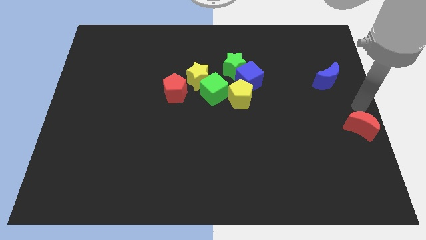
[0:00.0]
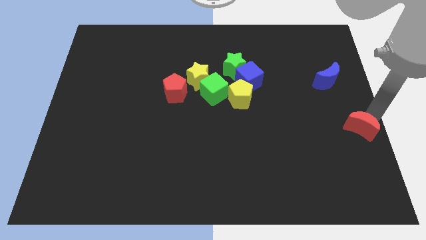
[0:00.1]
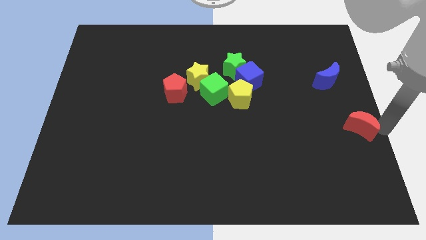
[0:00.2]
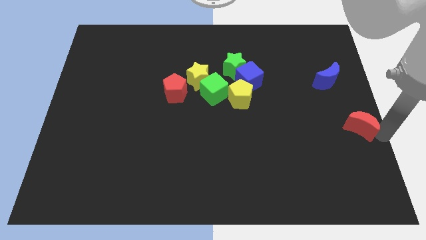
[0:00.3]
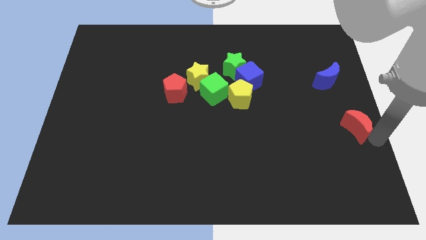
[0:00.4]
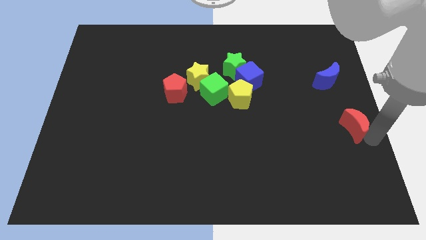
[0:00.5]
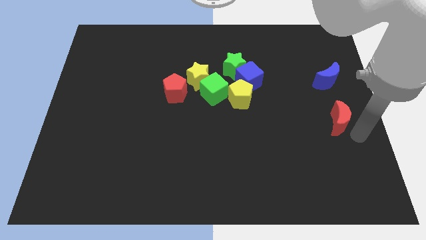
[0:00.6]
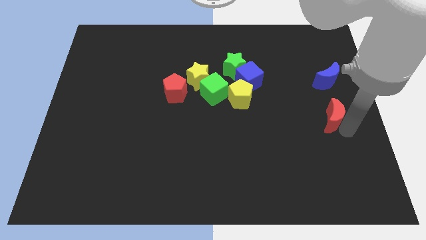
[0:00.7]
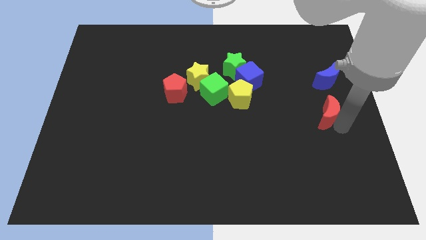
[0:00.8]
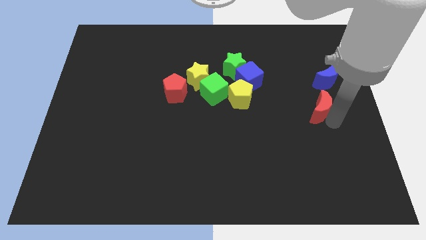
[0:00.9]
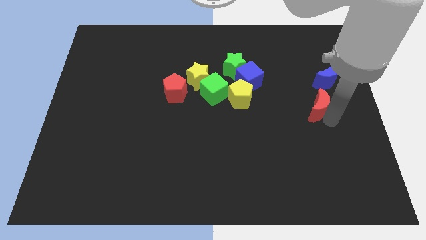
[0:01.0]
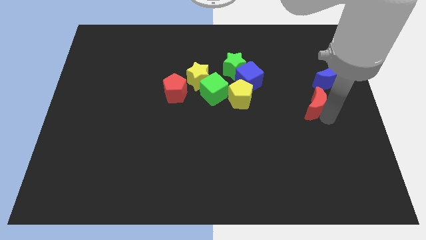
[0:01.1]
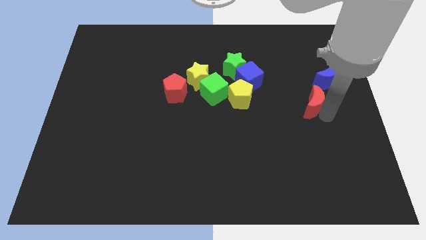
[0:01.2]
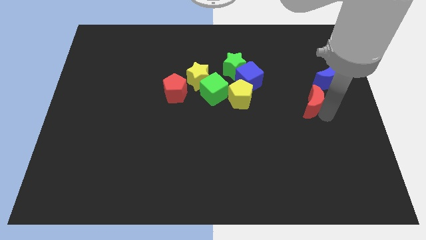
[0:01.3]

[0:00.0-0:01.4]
place the red crescent below the blue crescent

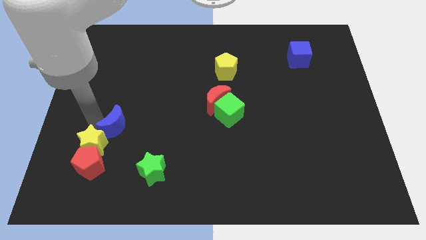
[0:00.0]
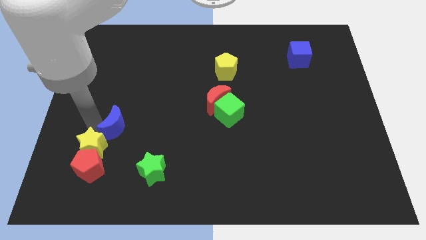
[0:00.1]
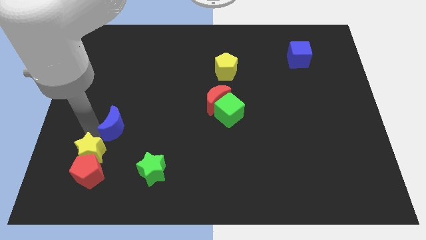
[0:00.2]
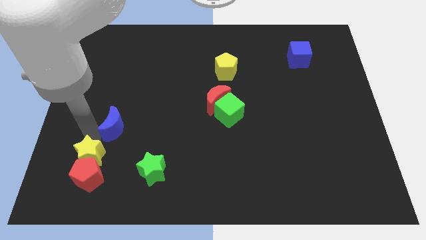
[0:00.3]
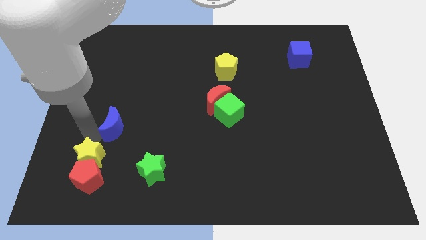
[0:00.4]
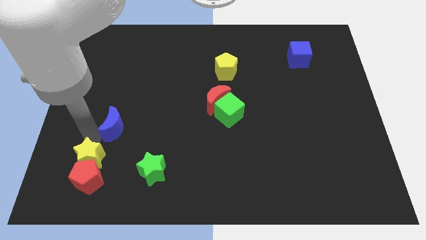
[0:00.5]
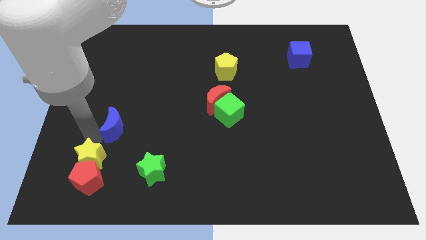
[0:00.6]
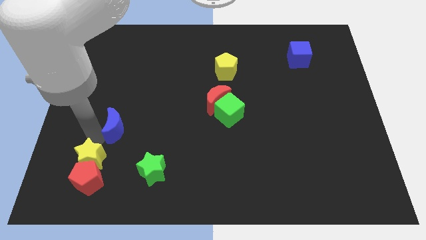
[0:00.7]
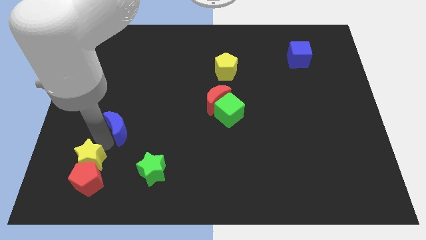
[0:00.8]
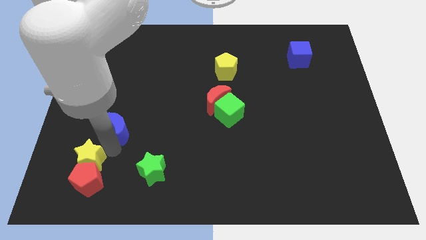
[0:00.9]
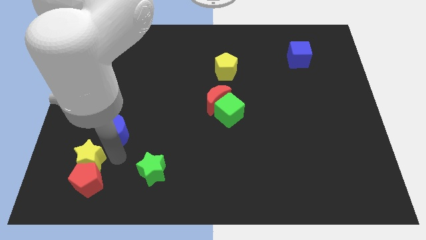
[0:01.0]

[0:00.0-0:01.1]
separate blue moon from yellow star

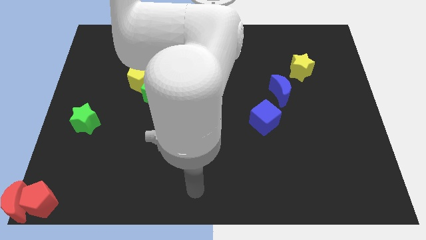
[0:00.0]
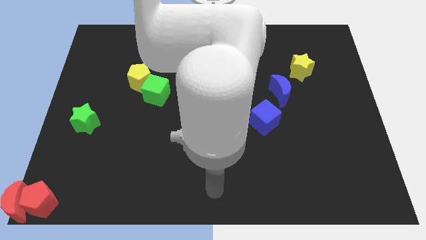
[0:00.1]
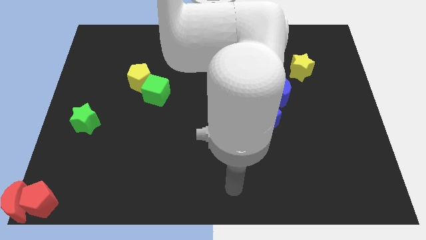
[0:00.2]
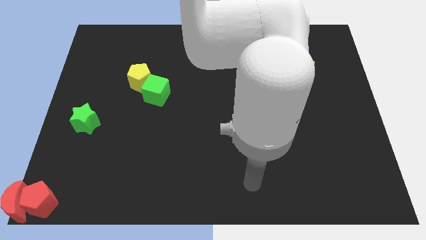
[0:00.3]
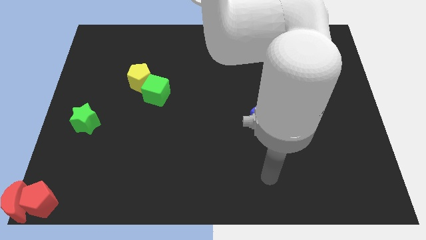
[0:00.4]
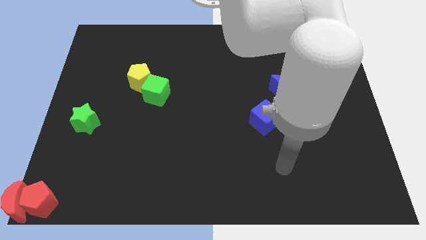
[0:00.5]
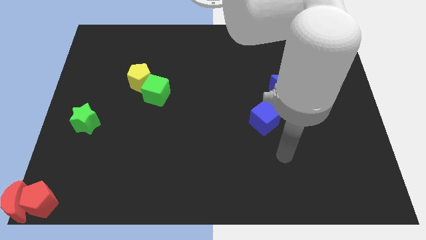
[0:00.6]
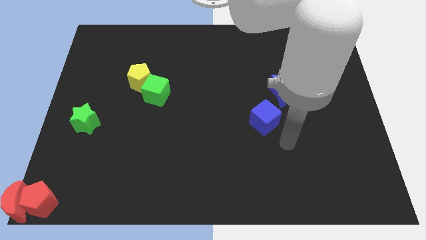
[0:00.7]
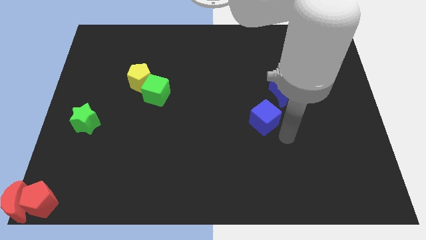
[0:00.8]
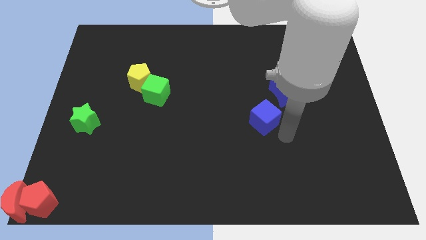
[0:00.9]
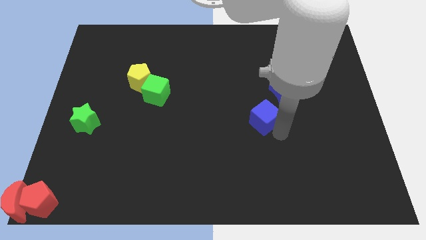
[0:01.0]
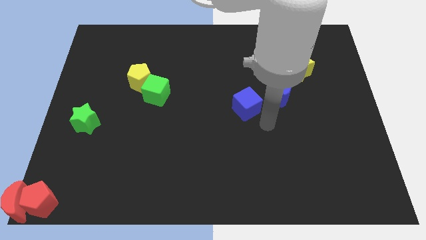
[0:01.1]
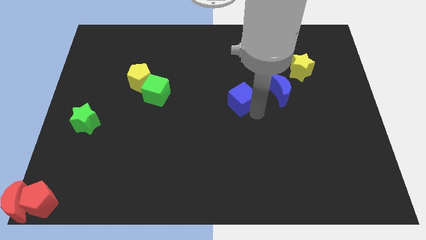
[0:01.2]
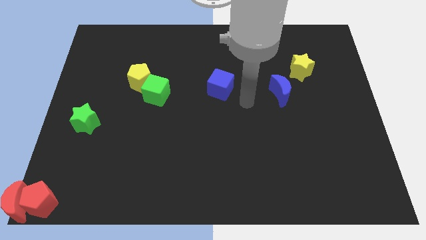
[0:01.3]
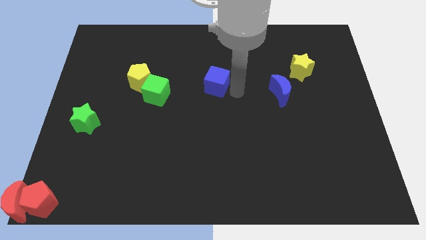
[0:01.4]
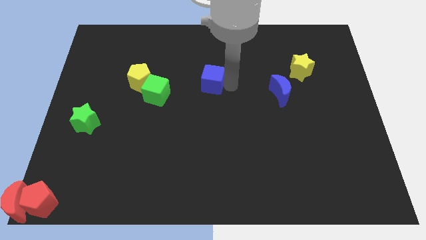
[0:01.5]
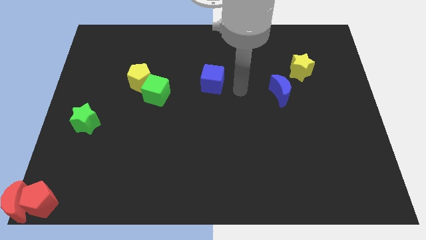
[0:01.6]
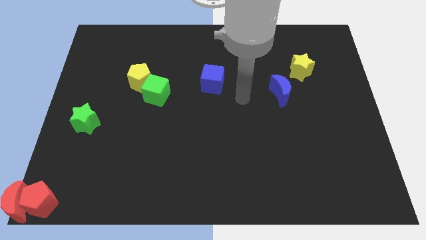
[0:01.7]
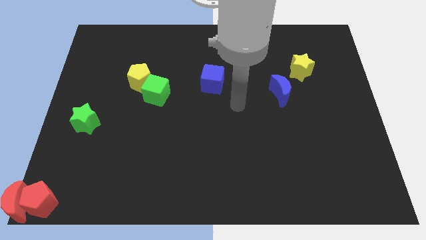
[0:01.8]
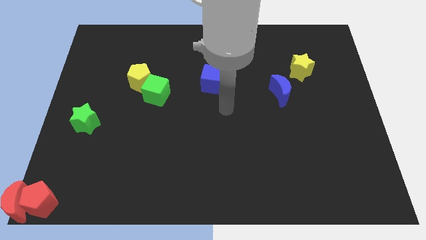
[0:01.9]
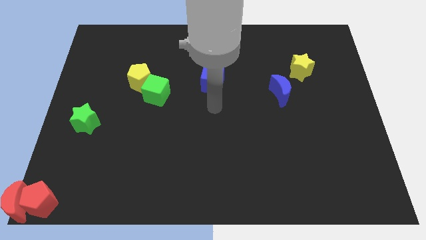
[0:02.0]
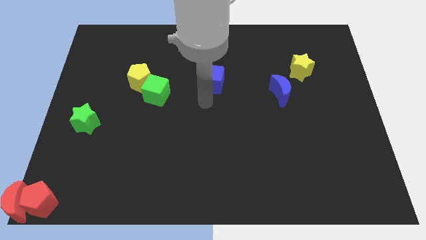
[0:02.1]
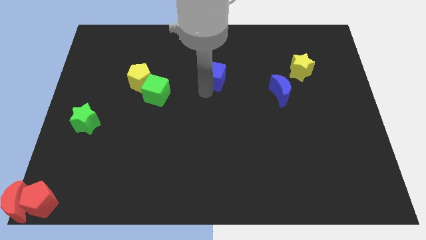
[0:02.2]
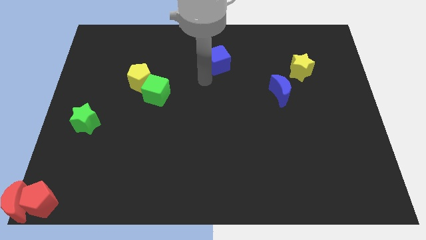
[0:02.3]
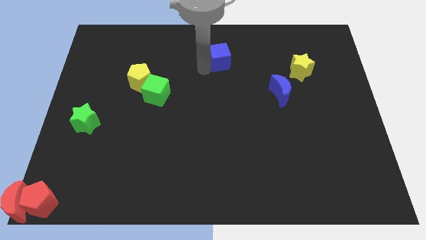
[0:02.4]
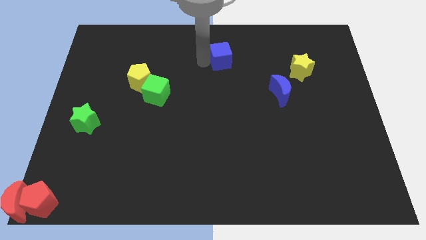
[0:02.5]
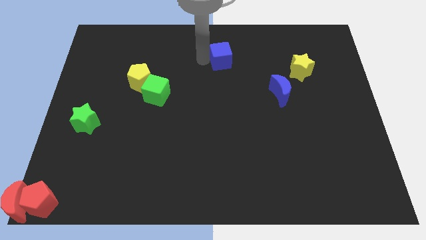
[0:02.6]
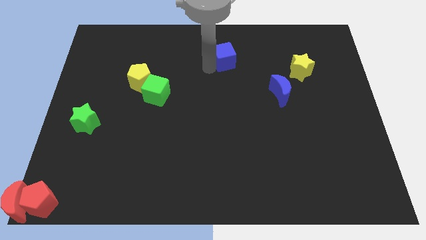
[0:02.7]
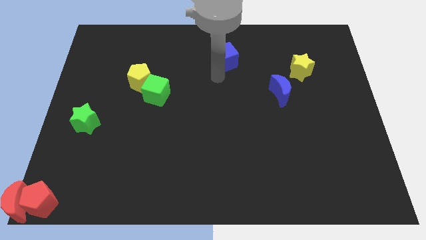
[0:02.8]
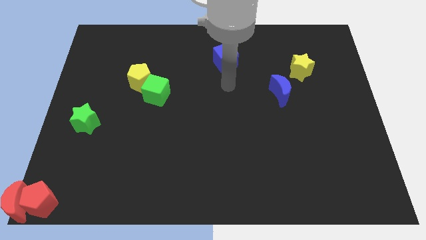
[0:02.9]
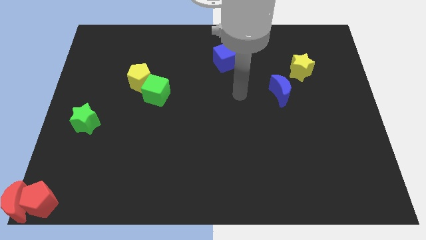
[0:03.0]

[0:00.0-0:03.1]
slide the blue cube diagonally top left to the blue moon

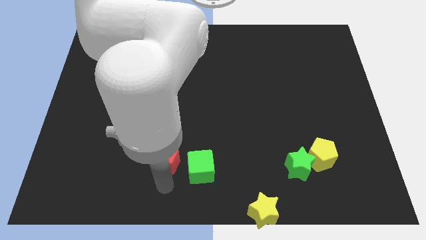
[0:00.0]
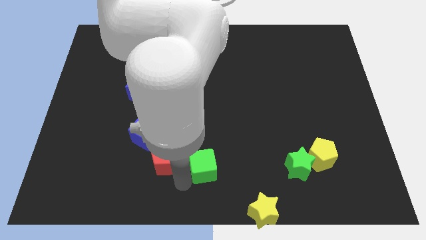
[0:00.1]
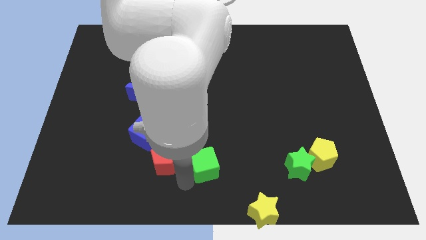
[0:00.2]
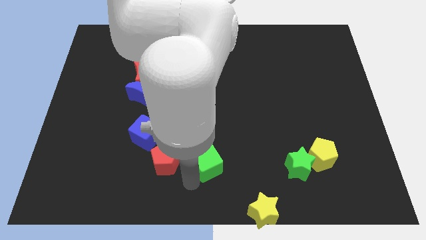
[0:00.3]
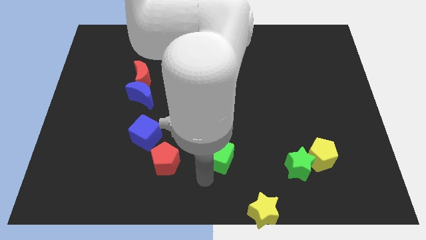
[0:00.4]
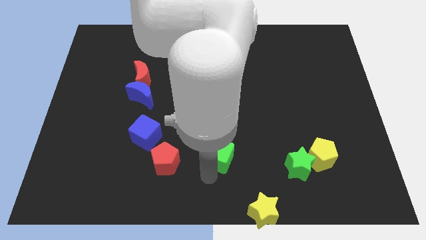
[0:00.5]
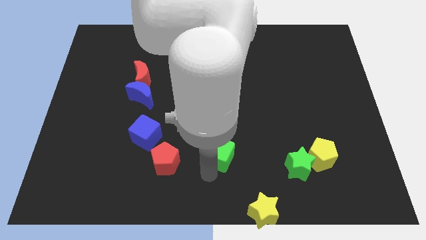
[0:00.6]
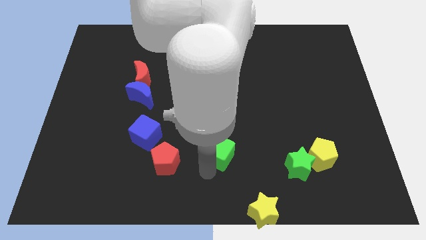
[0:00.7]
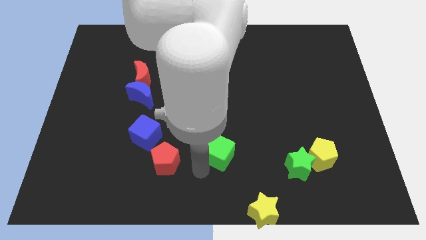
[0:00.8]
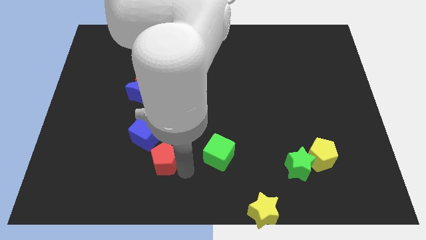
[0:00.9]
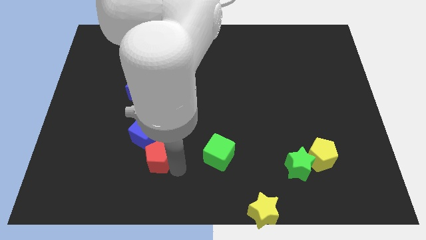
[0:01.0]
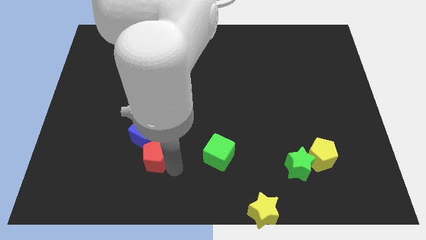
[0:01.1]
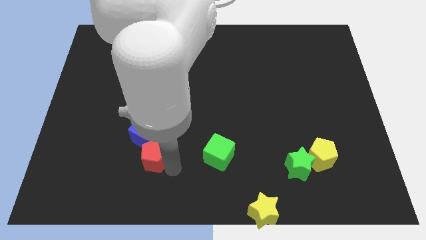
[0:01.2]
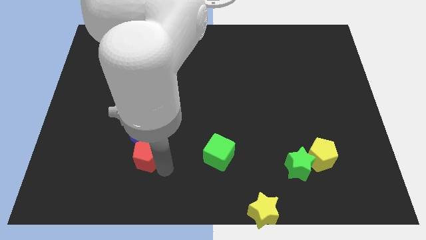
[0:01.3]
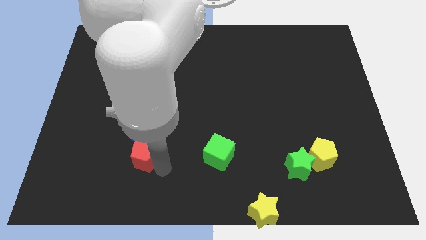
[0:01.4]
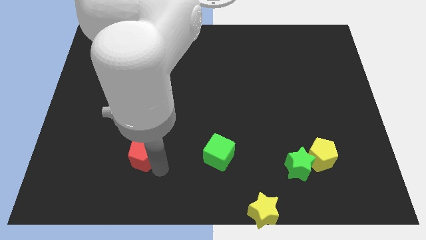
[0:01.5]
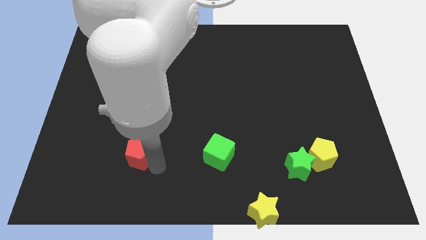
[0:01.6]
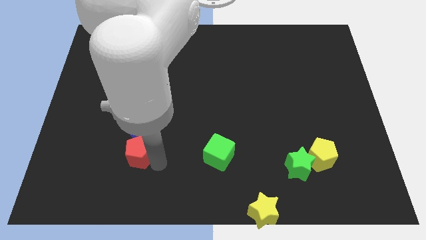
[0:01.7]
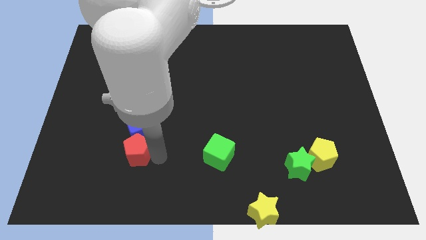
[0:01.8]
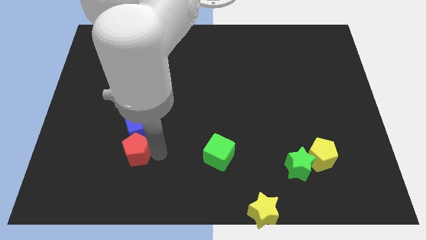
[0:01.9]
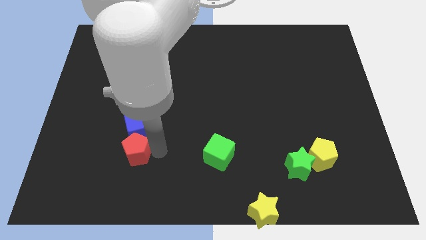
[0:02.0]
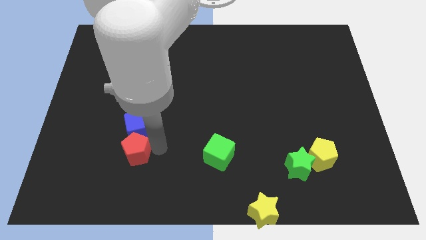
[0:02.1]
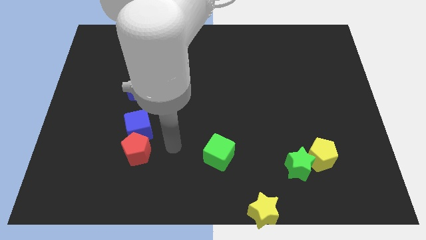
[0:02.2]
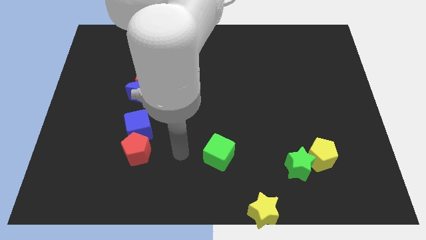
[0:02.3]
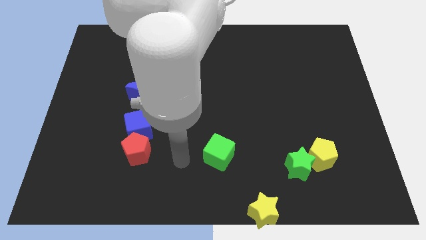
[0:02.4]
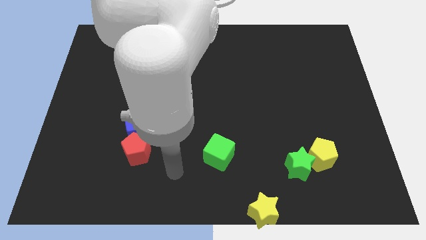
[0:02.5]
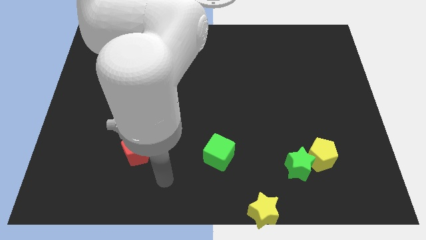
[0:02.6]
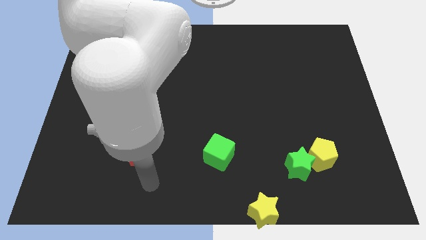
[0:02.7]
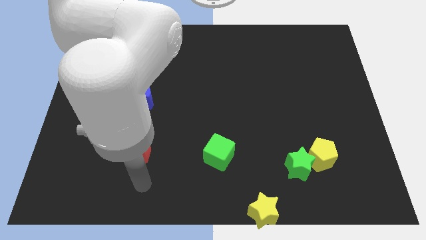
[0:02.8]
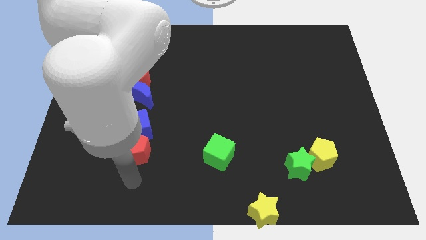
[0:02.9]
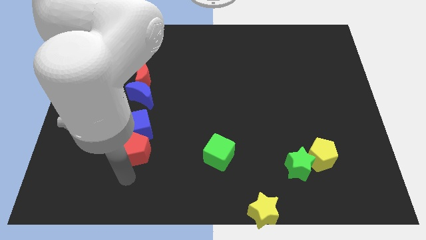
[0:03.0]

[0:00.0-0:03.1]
push the red pentagon towards the blue cube

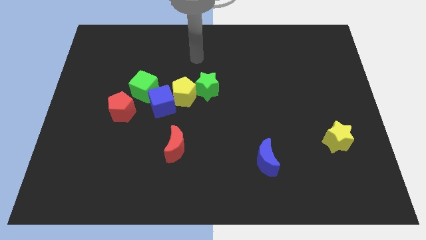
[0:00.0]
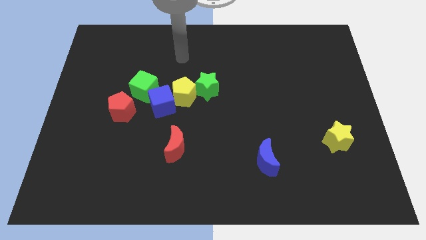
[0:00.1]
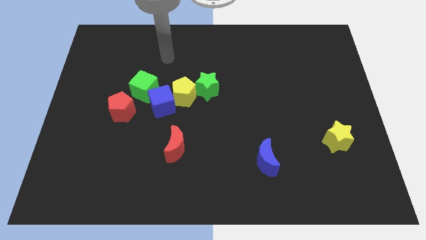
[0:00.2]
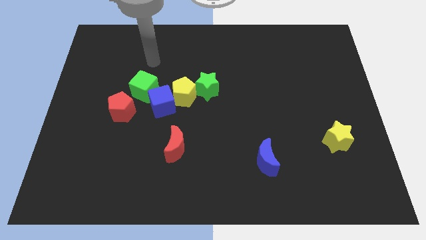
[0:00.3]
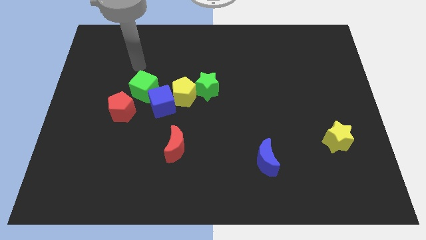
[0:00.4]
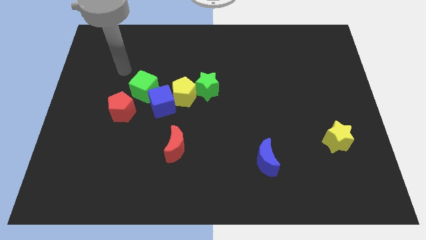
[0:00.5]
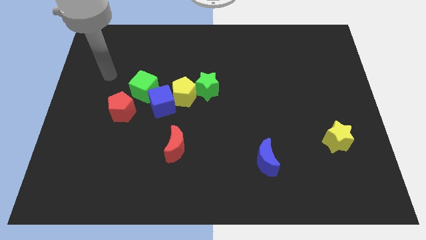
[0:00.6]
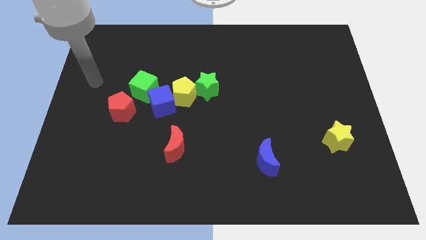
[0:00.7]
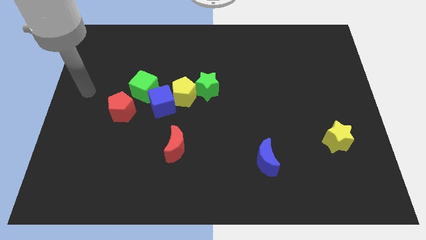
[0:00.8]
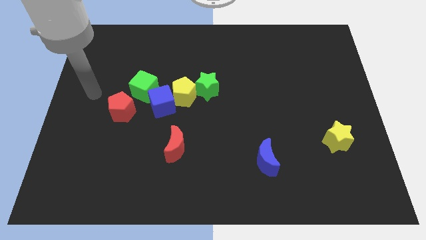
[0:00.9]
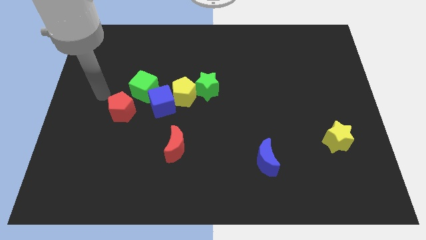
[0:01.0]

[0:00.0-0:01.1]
place the arm close to the red pentagon
